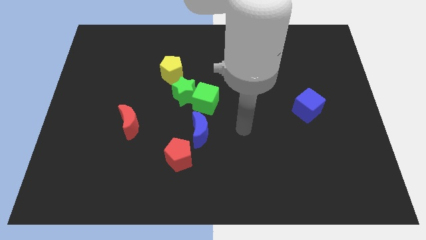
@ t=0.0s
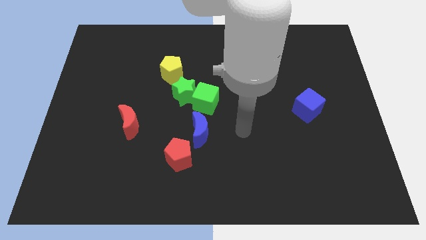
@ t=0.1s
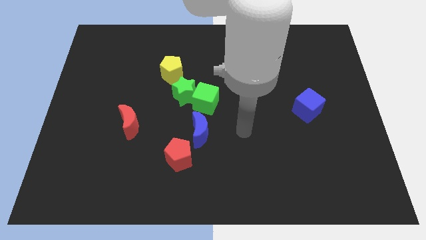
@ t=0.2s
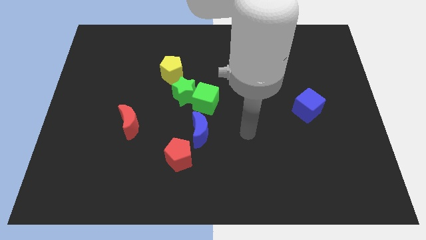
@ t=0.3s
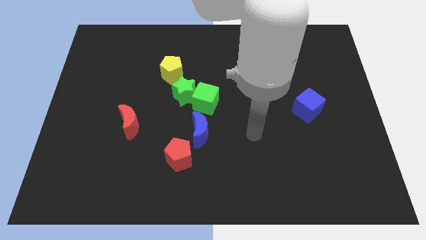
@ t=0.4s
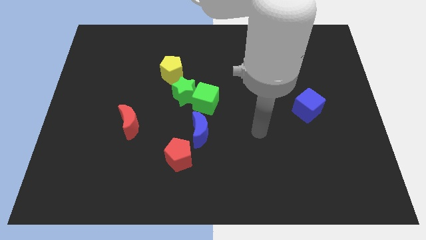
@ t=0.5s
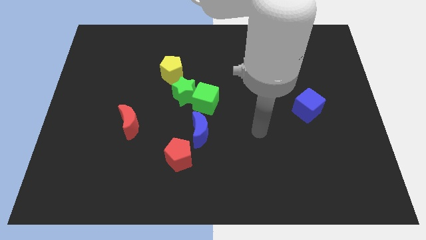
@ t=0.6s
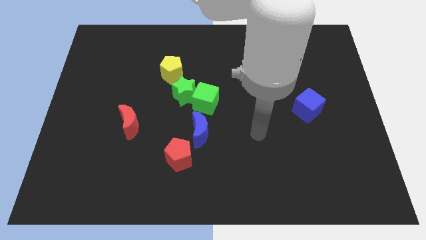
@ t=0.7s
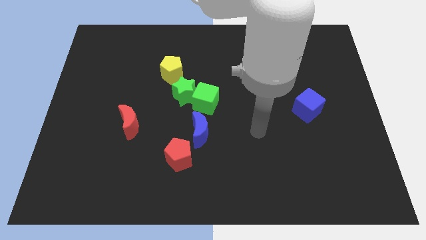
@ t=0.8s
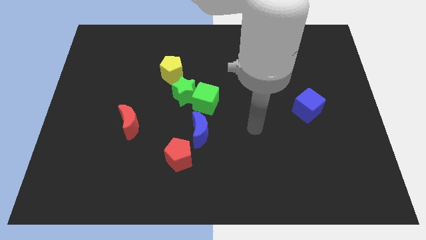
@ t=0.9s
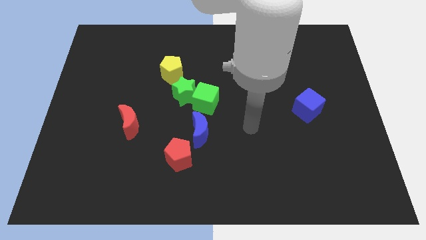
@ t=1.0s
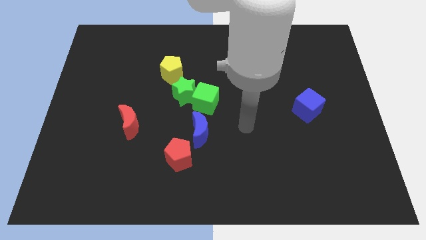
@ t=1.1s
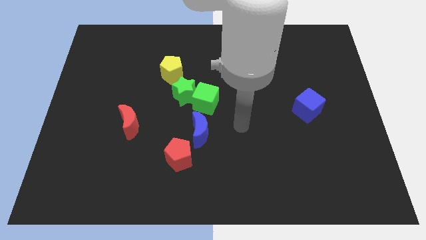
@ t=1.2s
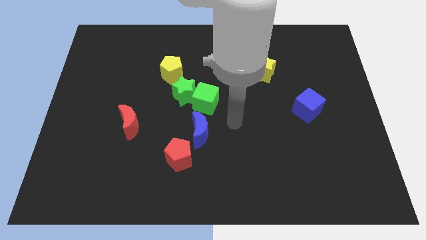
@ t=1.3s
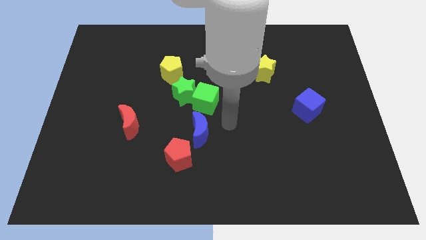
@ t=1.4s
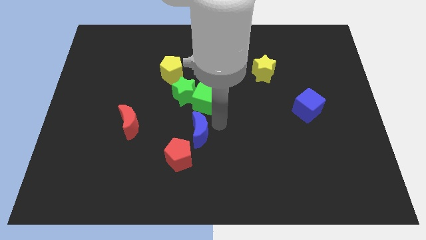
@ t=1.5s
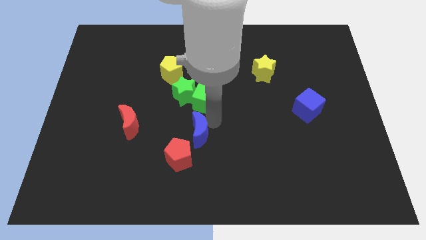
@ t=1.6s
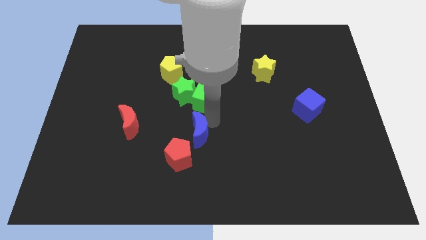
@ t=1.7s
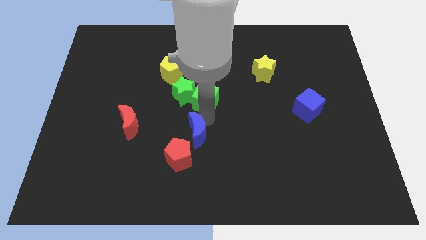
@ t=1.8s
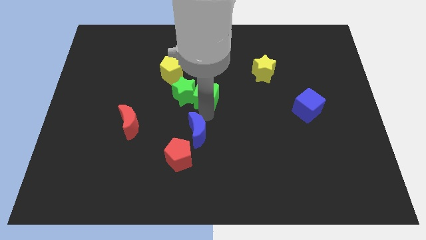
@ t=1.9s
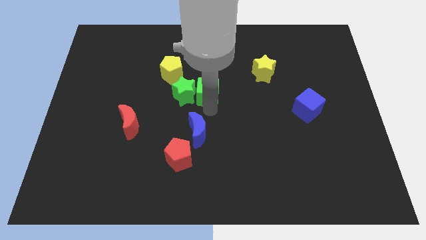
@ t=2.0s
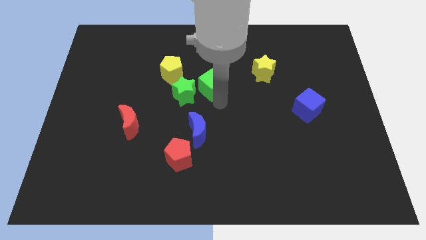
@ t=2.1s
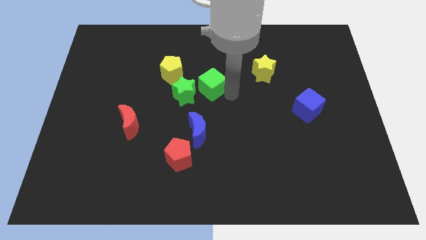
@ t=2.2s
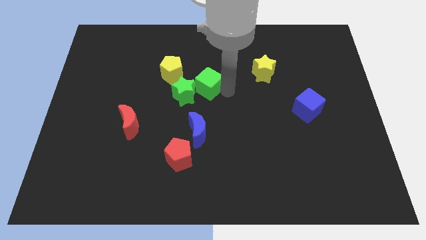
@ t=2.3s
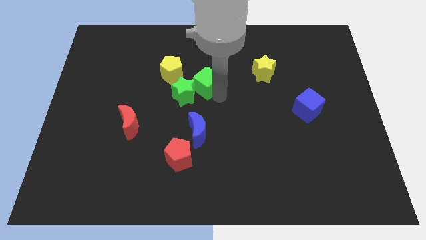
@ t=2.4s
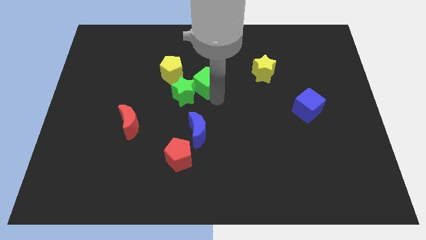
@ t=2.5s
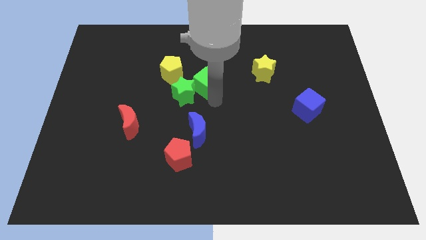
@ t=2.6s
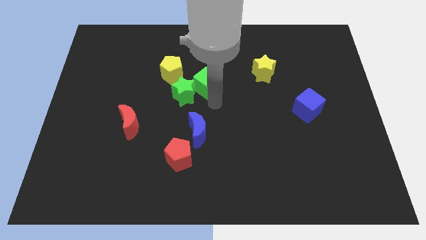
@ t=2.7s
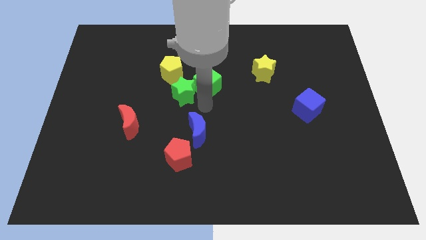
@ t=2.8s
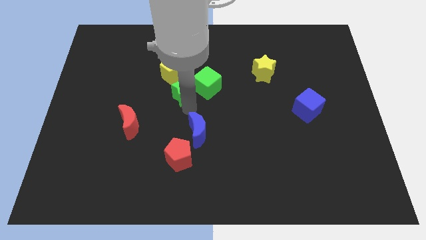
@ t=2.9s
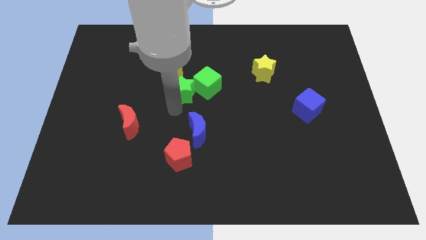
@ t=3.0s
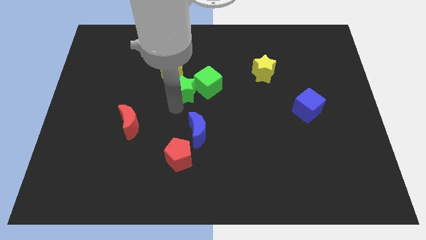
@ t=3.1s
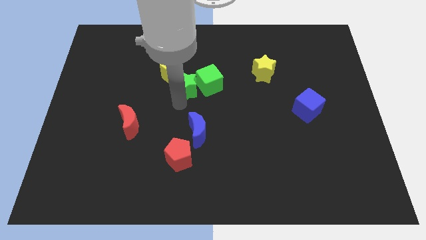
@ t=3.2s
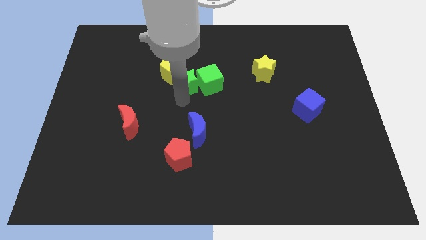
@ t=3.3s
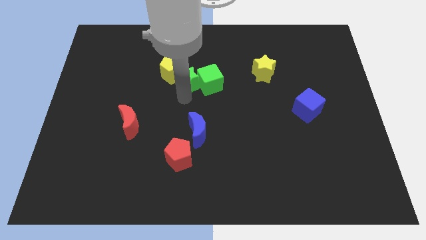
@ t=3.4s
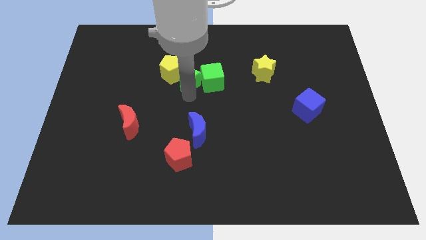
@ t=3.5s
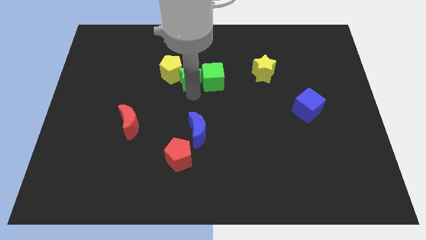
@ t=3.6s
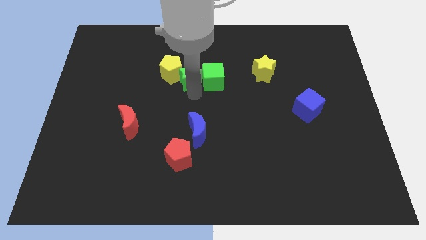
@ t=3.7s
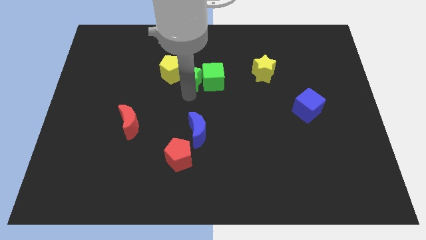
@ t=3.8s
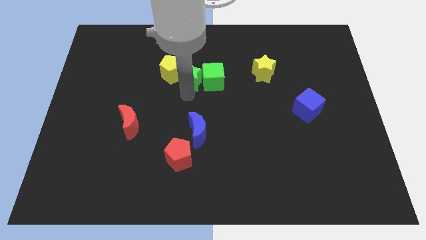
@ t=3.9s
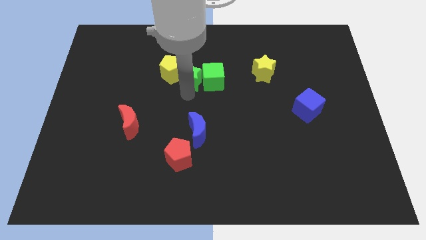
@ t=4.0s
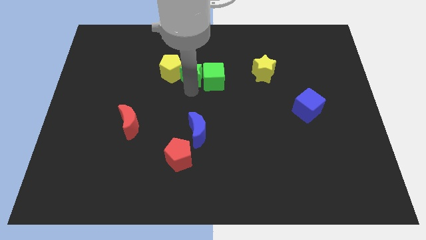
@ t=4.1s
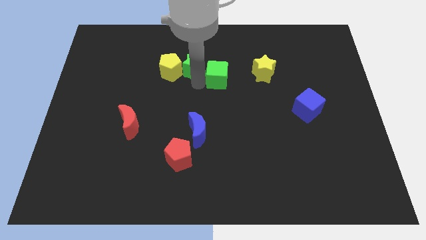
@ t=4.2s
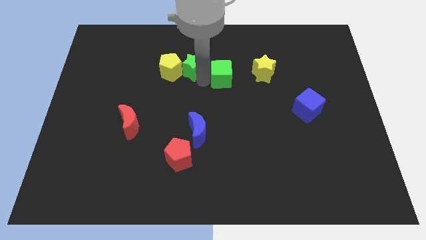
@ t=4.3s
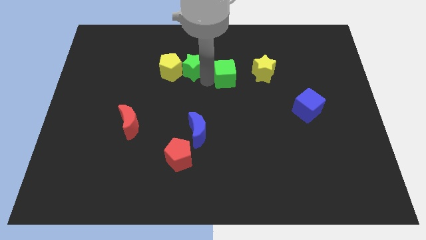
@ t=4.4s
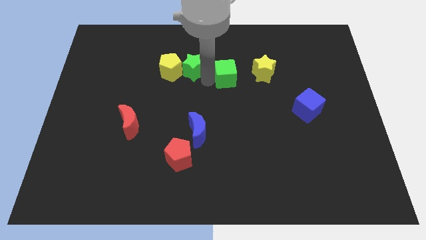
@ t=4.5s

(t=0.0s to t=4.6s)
move the green star and green cube at the right side of the yellow pentagon

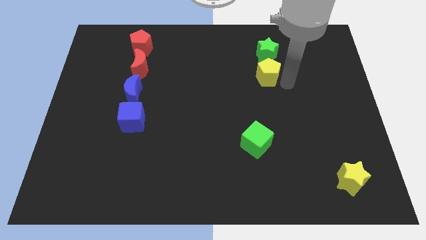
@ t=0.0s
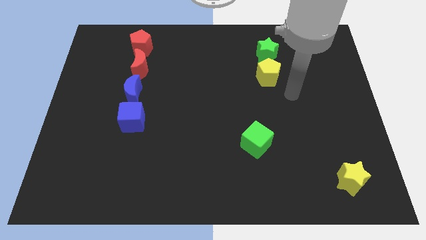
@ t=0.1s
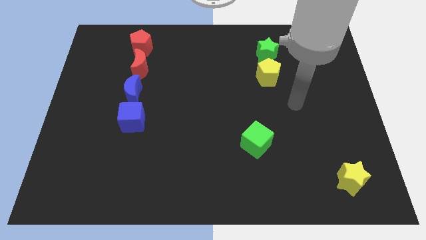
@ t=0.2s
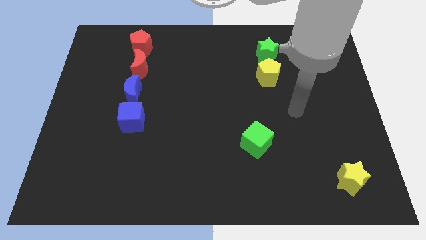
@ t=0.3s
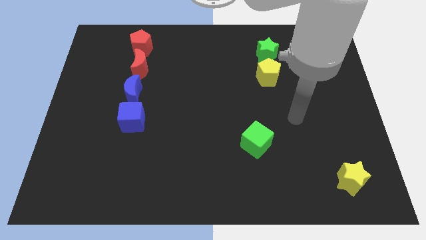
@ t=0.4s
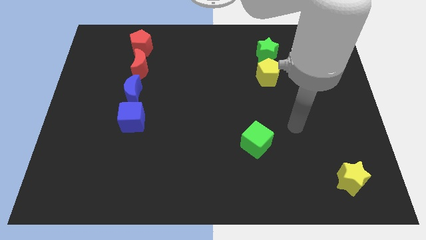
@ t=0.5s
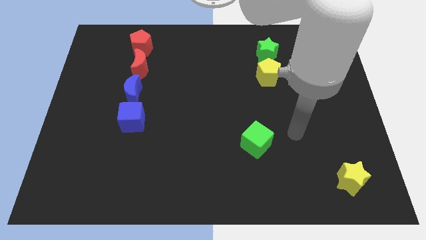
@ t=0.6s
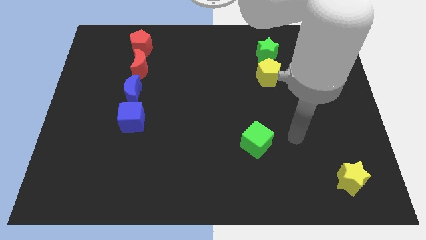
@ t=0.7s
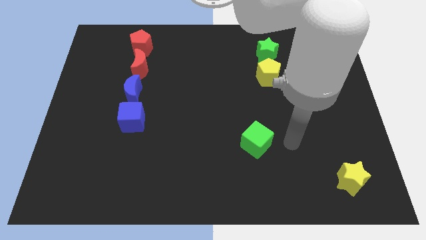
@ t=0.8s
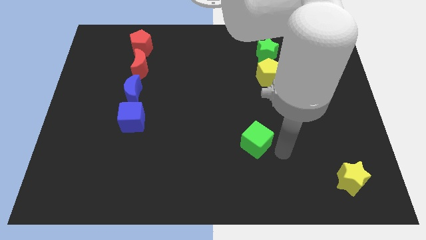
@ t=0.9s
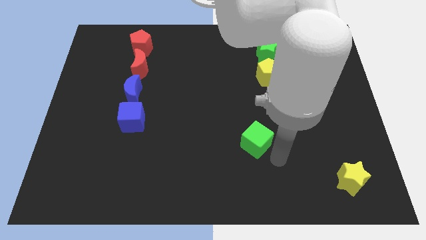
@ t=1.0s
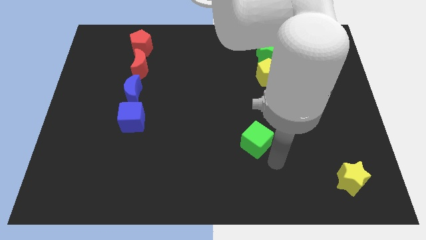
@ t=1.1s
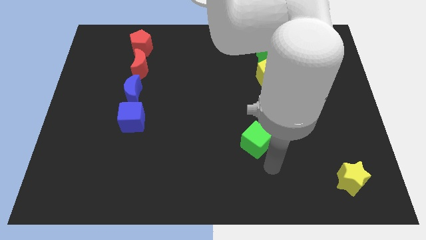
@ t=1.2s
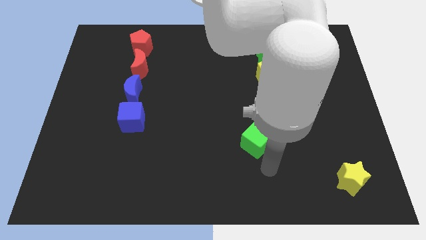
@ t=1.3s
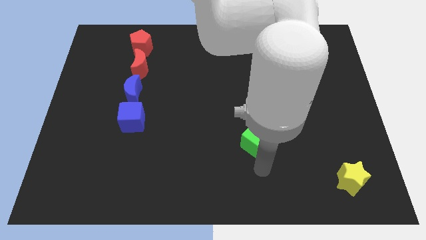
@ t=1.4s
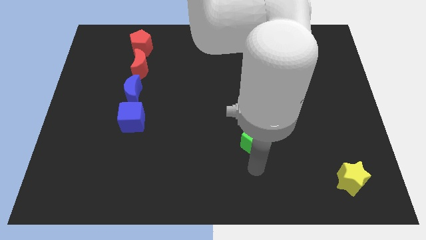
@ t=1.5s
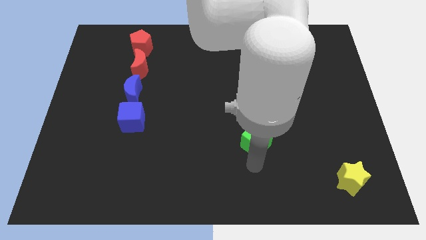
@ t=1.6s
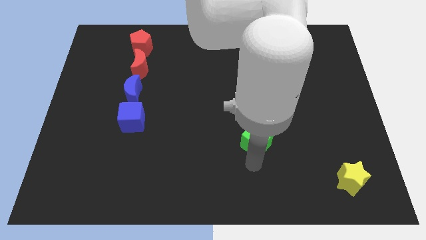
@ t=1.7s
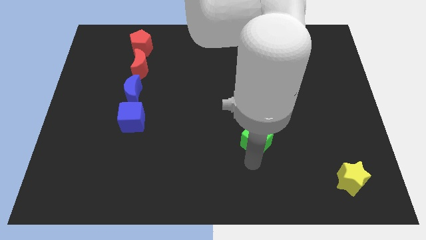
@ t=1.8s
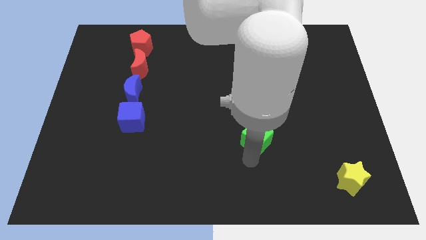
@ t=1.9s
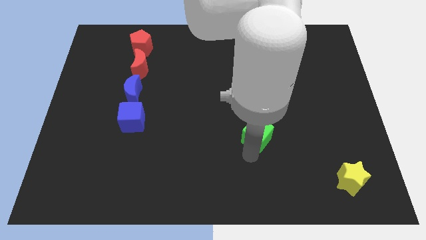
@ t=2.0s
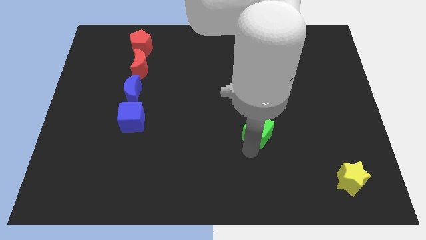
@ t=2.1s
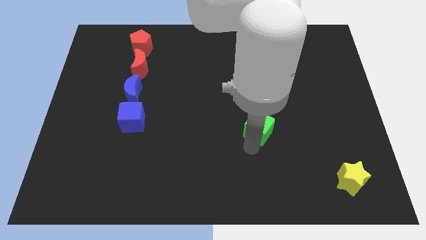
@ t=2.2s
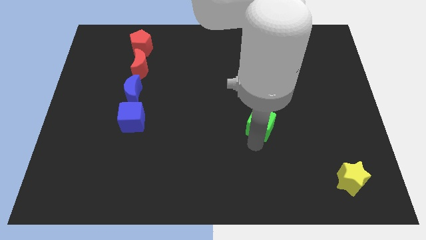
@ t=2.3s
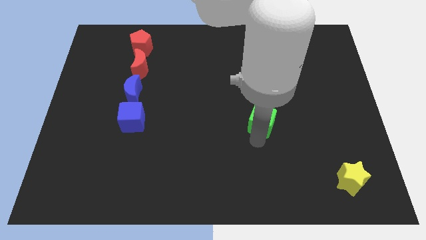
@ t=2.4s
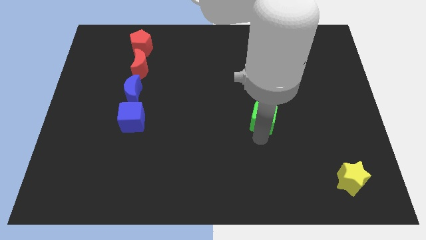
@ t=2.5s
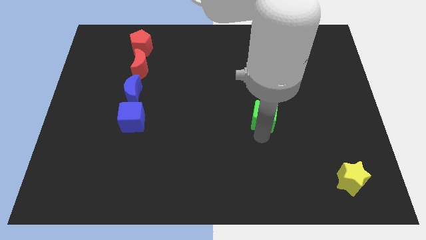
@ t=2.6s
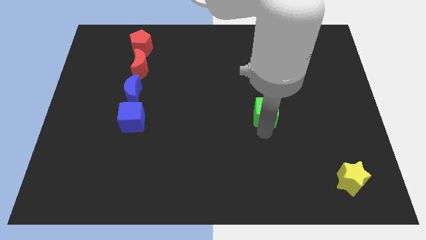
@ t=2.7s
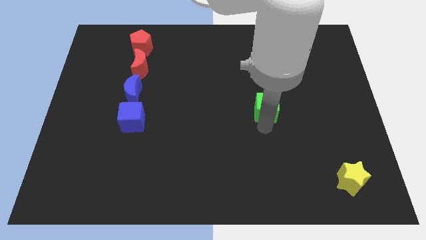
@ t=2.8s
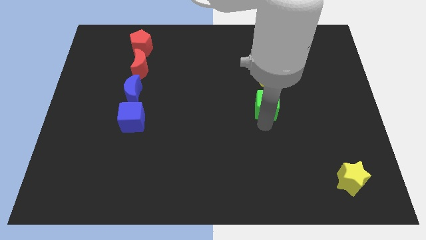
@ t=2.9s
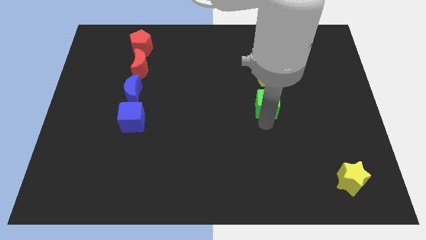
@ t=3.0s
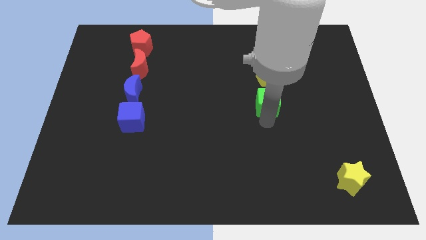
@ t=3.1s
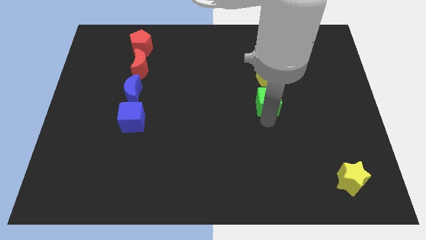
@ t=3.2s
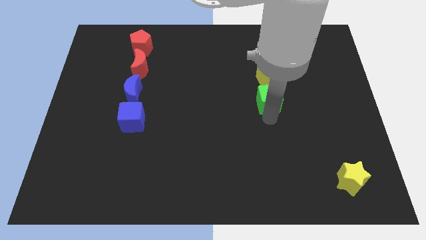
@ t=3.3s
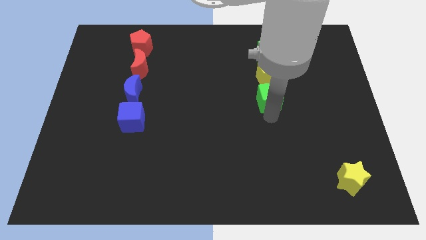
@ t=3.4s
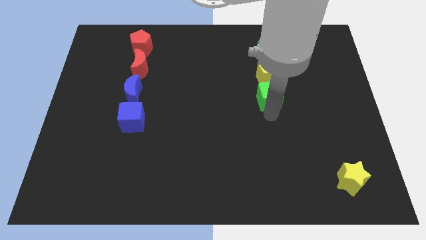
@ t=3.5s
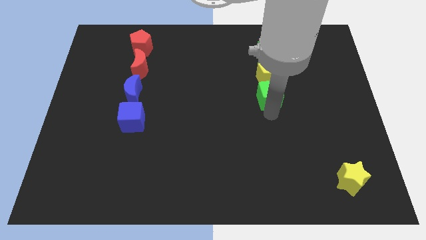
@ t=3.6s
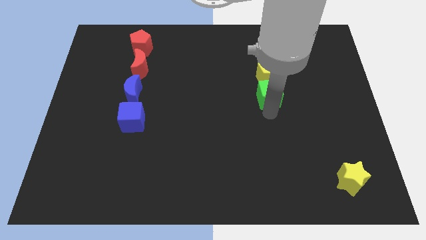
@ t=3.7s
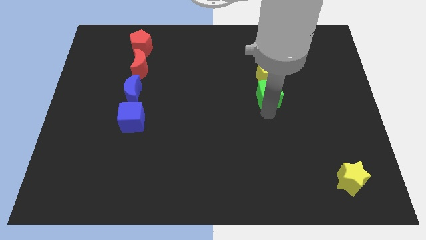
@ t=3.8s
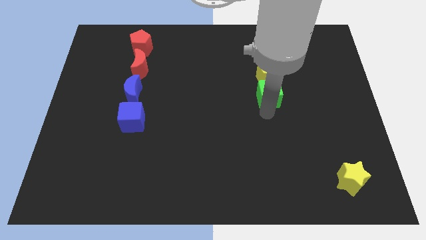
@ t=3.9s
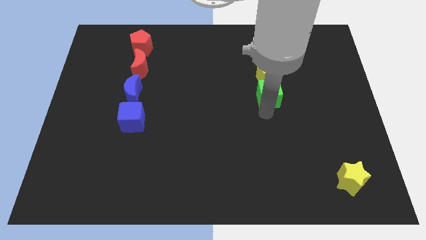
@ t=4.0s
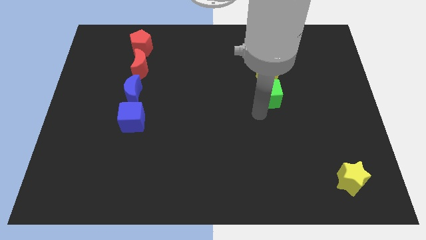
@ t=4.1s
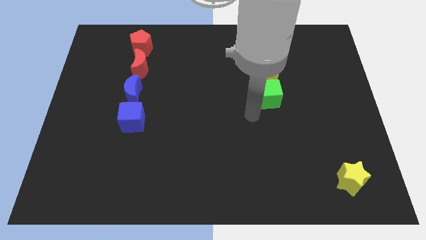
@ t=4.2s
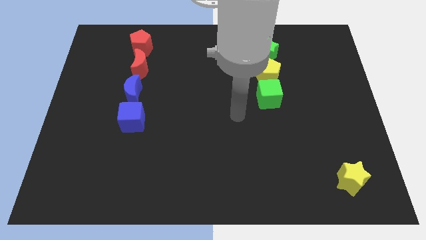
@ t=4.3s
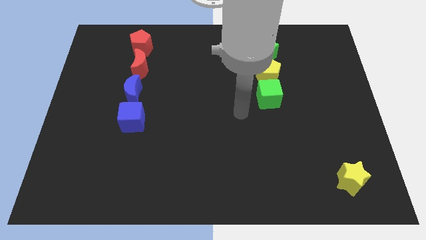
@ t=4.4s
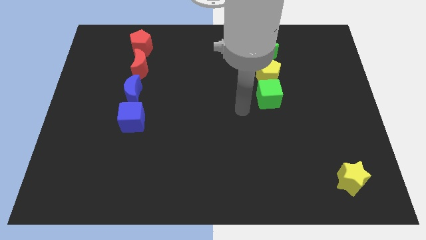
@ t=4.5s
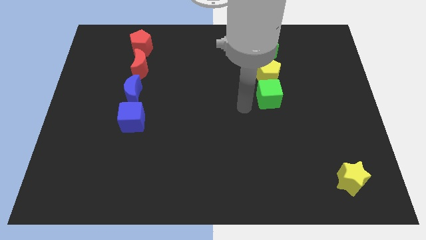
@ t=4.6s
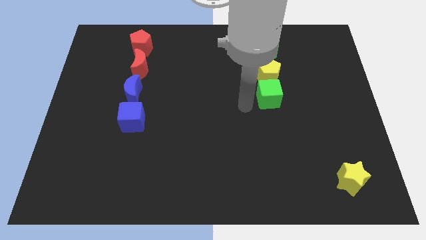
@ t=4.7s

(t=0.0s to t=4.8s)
put the green cube underneath the yellow pentagon
